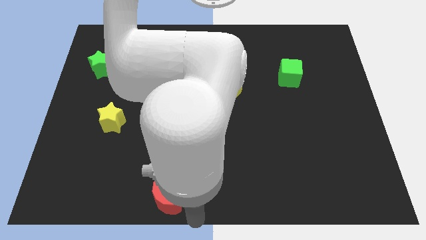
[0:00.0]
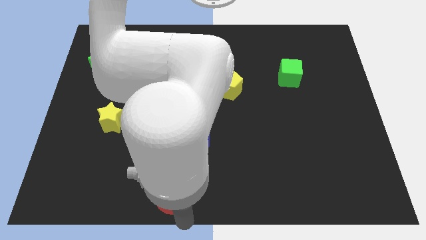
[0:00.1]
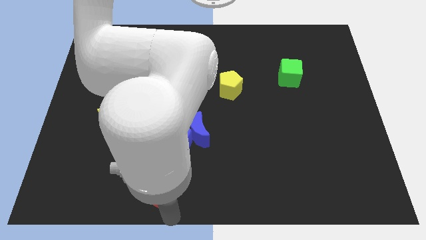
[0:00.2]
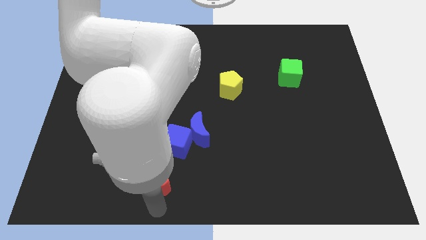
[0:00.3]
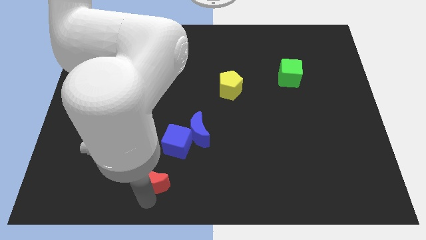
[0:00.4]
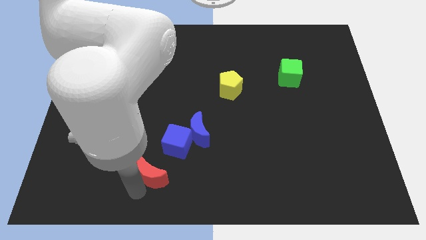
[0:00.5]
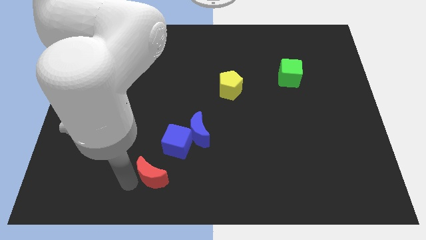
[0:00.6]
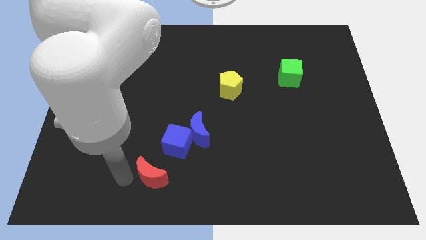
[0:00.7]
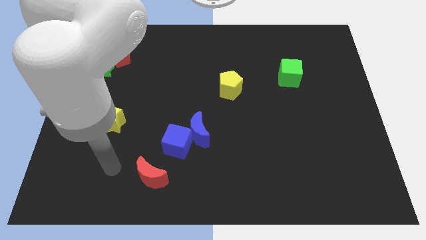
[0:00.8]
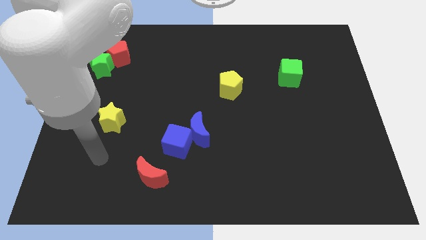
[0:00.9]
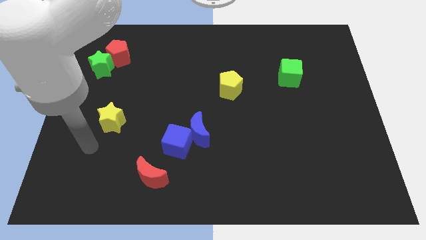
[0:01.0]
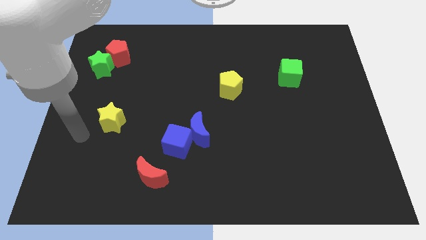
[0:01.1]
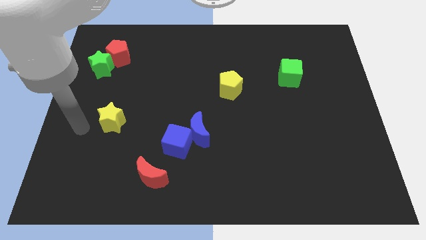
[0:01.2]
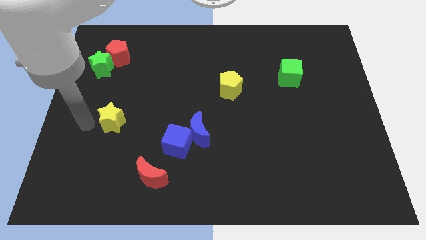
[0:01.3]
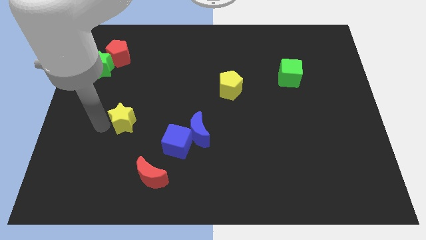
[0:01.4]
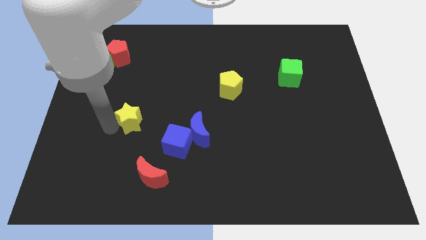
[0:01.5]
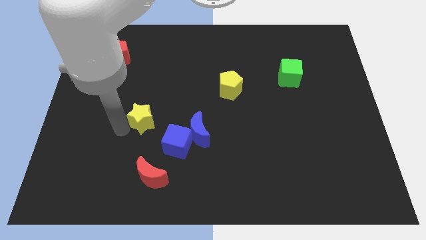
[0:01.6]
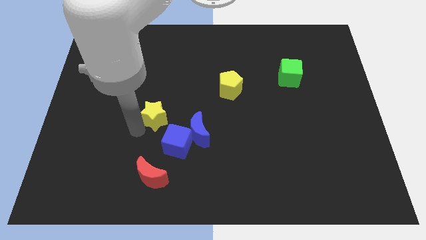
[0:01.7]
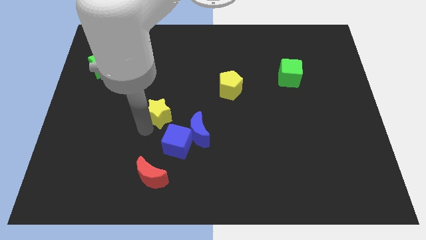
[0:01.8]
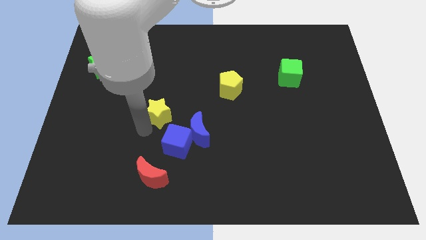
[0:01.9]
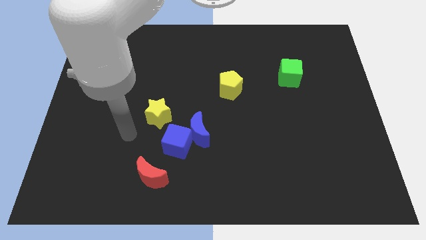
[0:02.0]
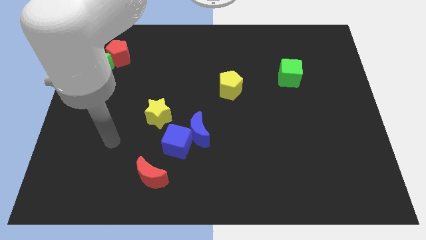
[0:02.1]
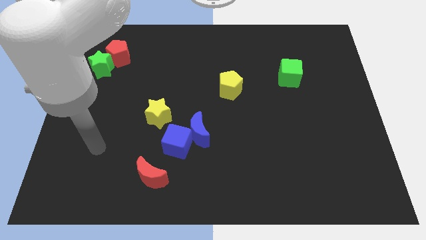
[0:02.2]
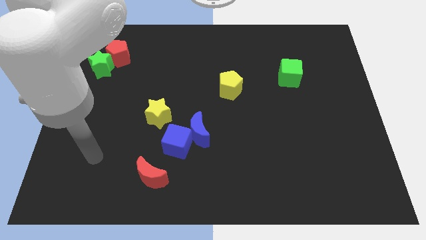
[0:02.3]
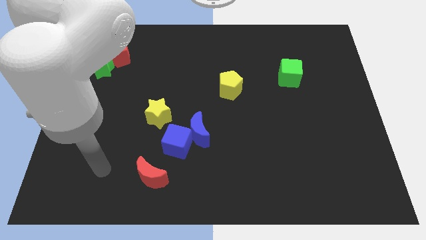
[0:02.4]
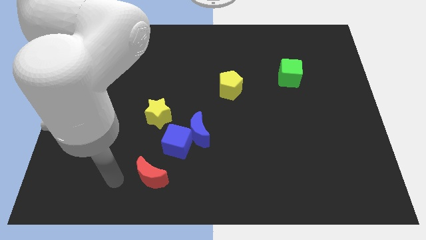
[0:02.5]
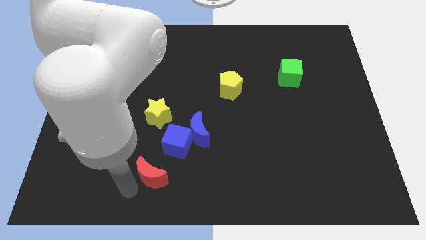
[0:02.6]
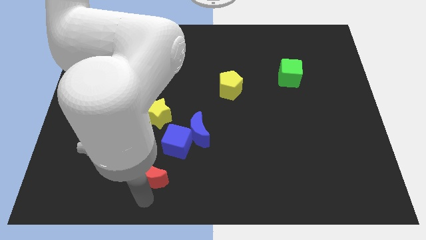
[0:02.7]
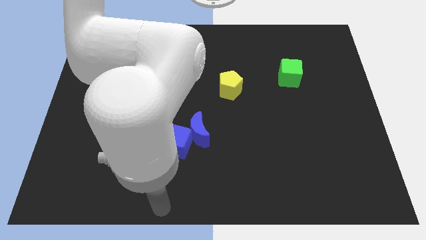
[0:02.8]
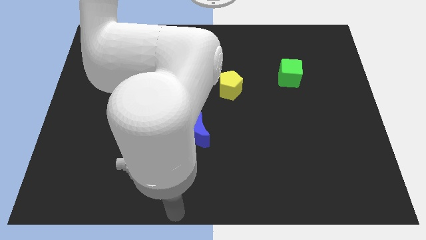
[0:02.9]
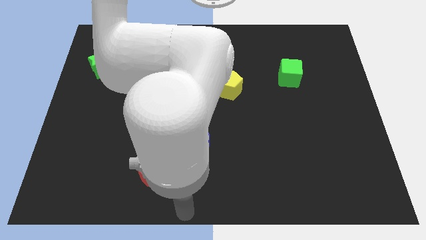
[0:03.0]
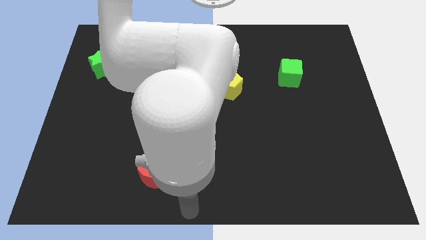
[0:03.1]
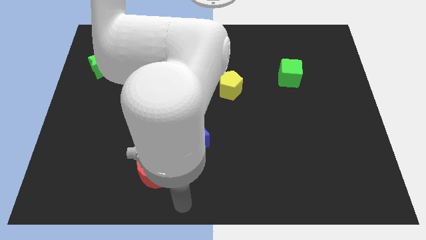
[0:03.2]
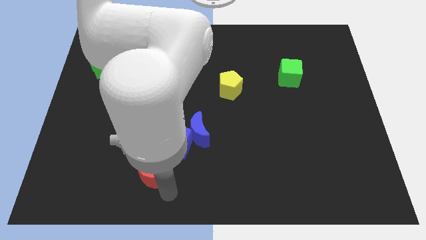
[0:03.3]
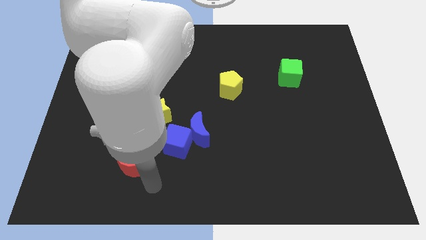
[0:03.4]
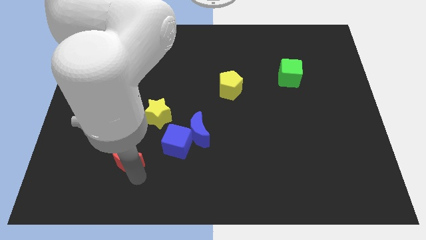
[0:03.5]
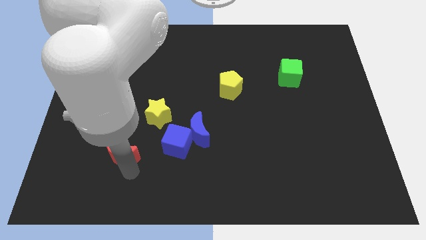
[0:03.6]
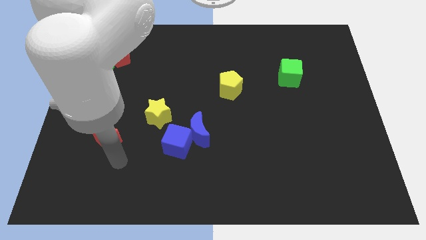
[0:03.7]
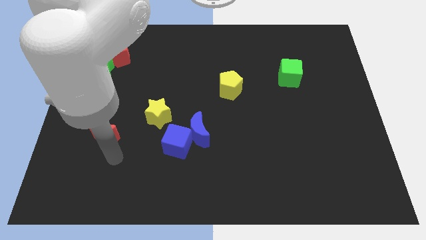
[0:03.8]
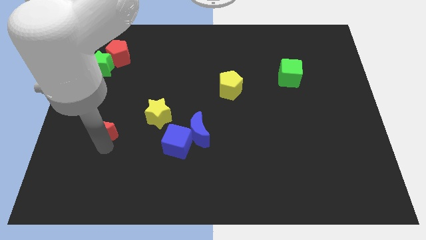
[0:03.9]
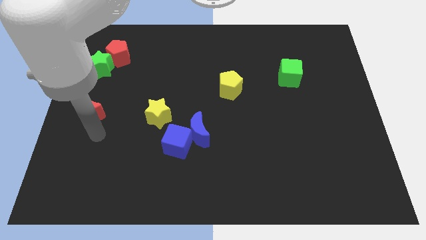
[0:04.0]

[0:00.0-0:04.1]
drag red moon parallel right to the yellow star

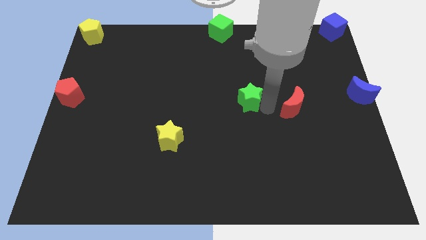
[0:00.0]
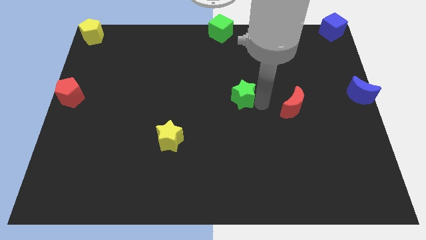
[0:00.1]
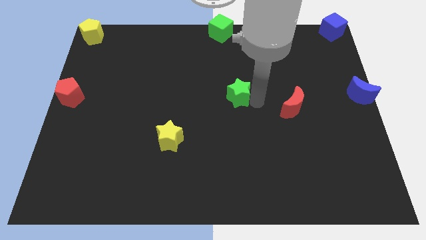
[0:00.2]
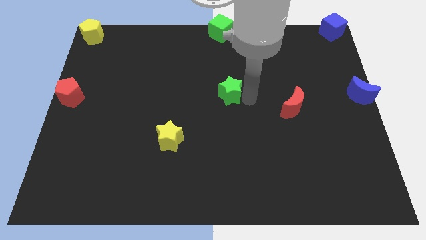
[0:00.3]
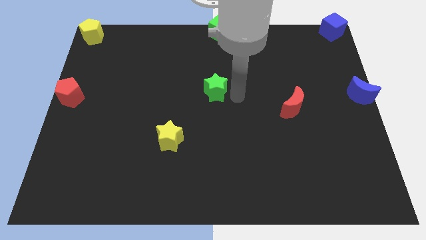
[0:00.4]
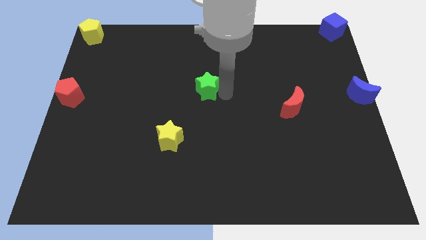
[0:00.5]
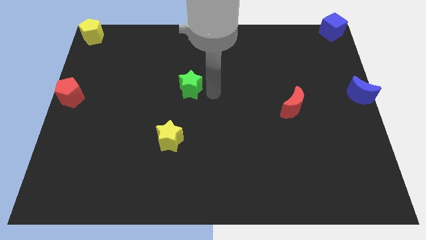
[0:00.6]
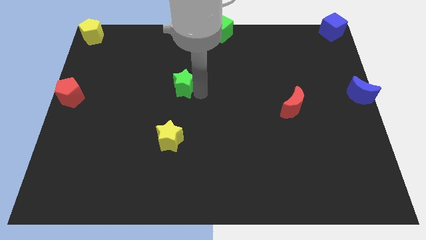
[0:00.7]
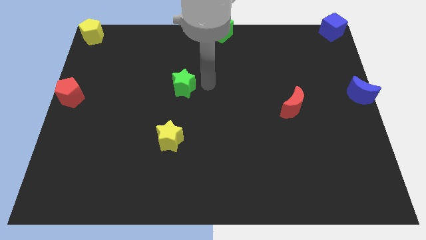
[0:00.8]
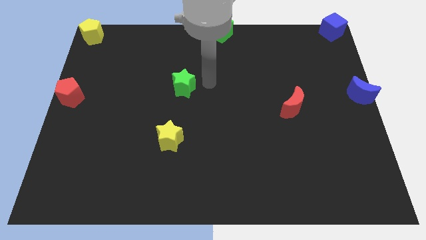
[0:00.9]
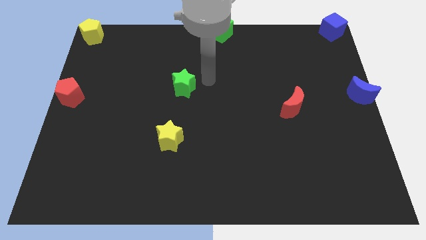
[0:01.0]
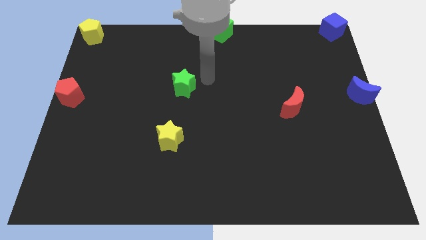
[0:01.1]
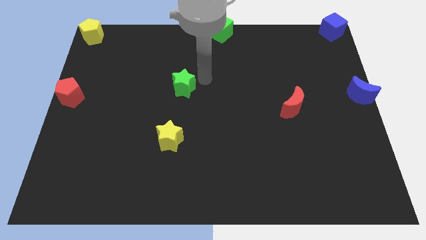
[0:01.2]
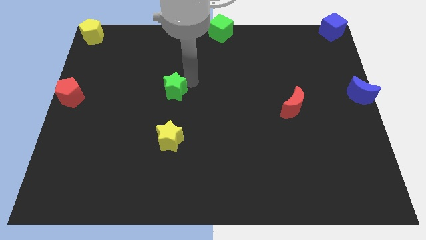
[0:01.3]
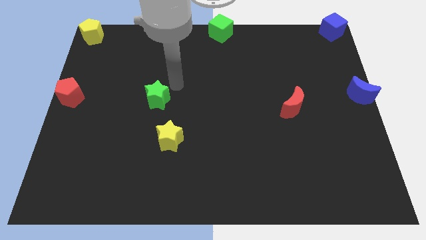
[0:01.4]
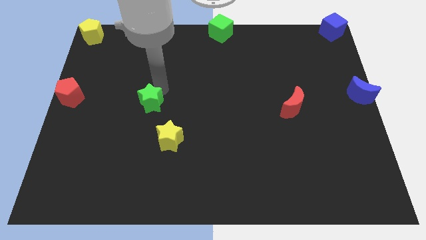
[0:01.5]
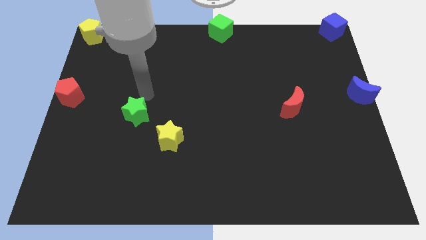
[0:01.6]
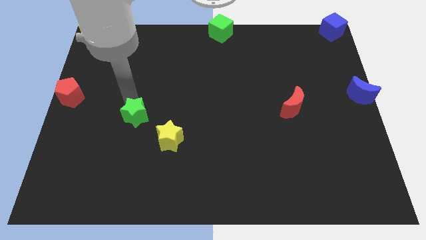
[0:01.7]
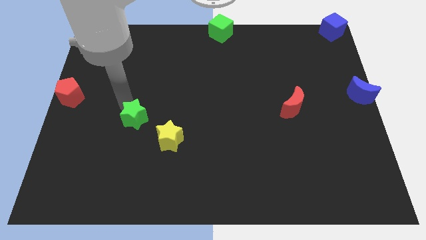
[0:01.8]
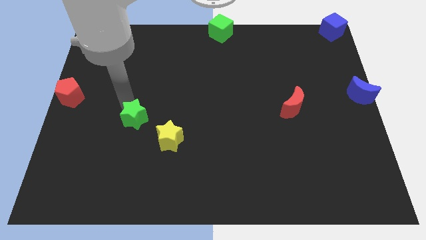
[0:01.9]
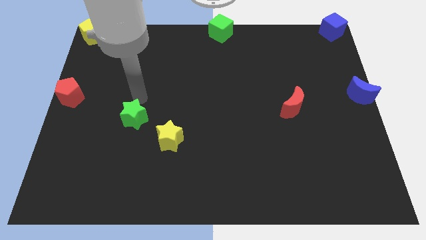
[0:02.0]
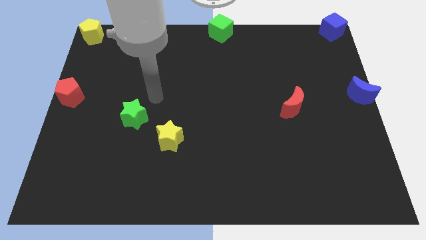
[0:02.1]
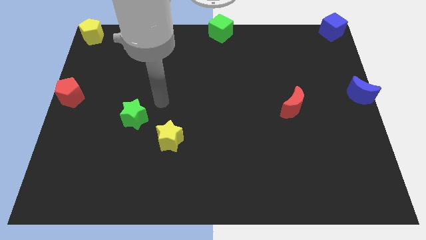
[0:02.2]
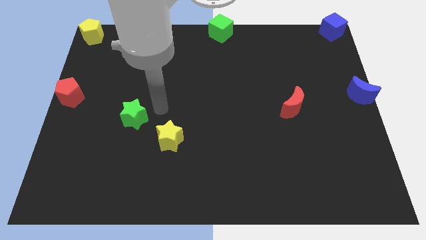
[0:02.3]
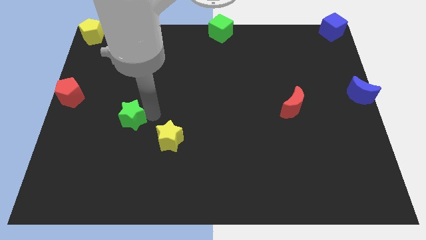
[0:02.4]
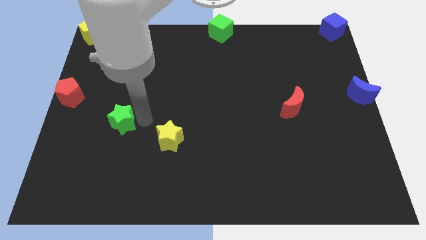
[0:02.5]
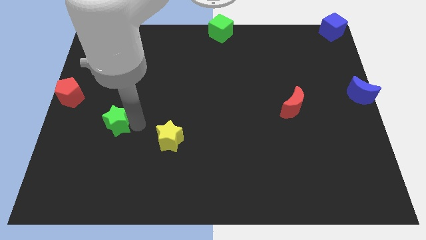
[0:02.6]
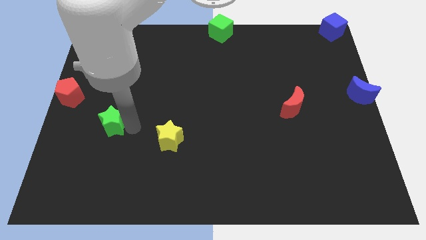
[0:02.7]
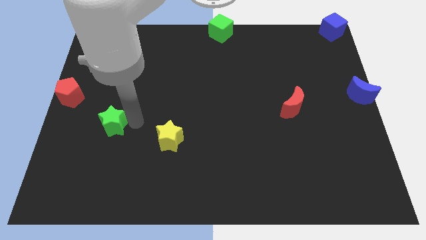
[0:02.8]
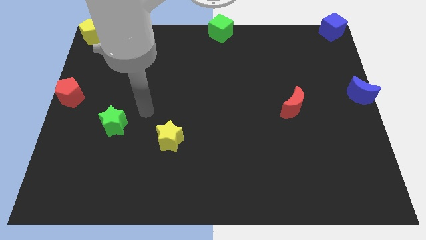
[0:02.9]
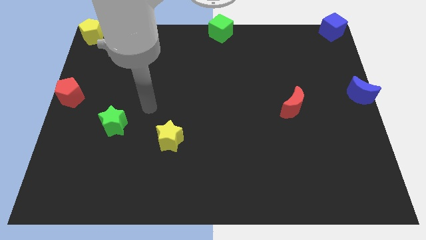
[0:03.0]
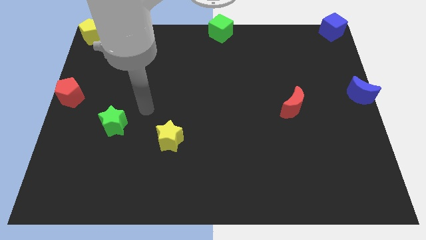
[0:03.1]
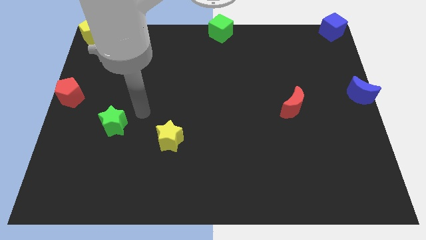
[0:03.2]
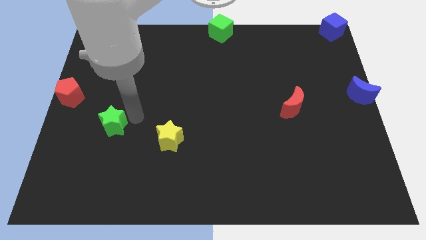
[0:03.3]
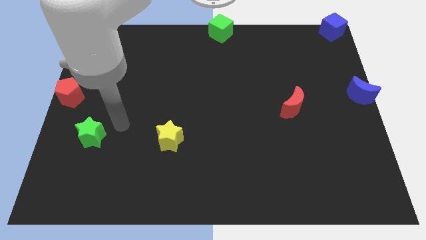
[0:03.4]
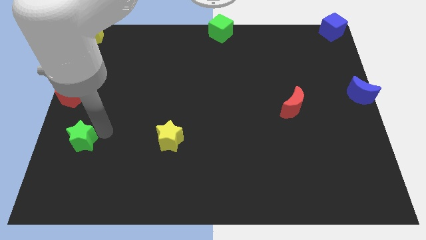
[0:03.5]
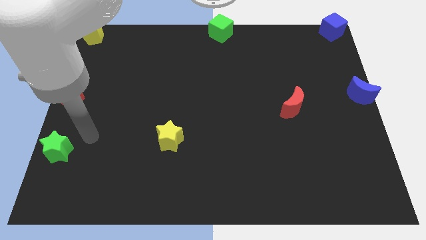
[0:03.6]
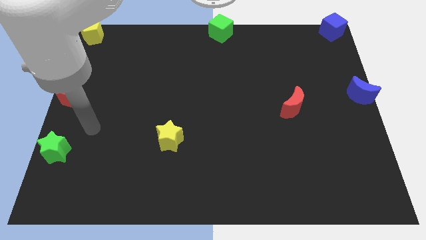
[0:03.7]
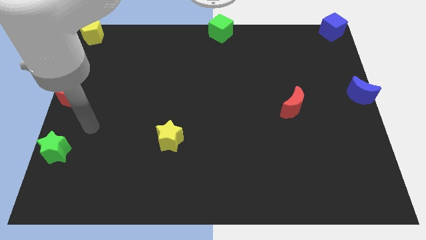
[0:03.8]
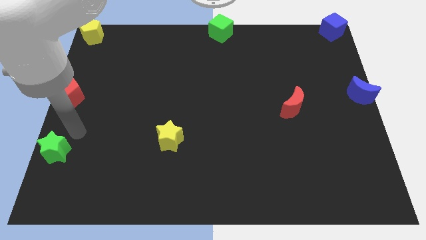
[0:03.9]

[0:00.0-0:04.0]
put the green star underneath the red pentagon

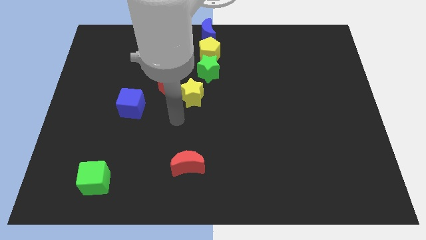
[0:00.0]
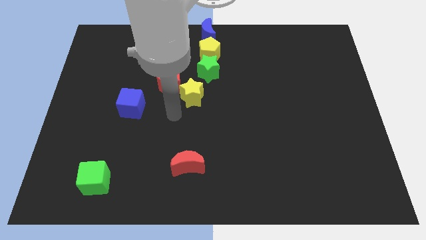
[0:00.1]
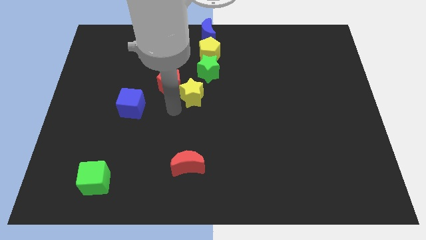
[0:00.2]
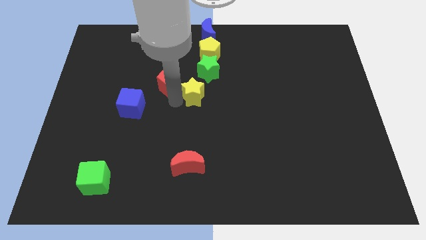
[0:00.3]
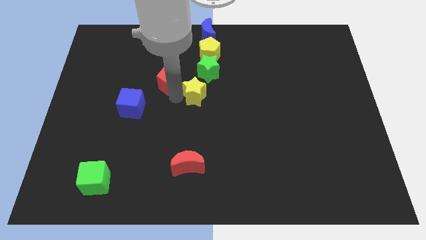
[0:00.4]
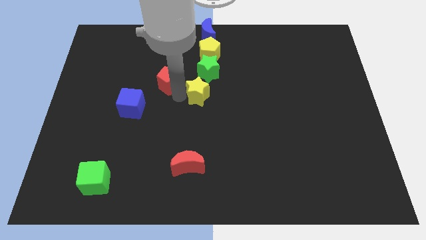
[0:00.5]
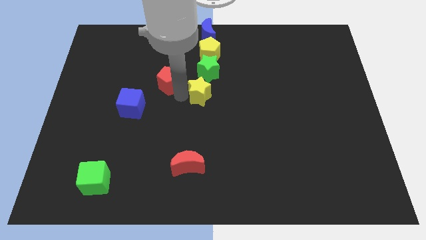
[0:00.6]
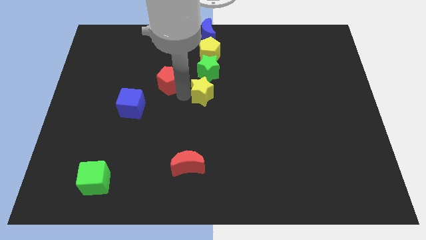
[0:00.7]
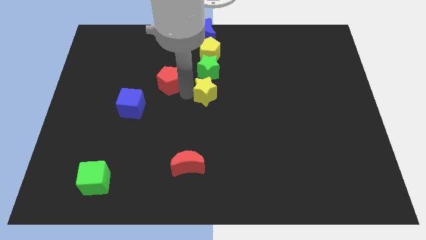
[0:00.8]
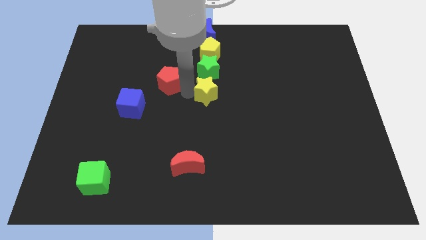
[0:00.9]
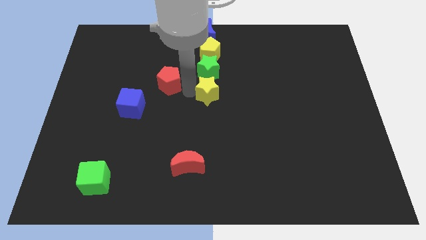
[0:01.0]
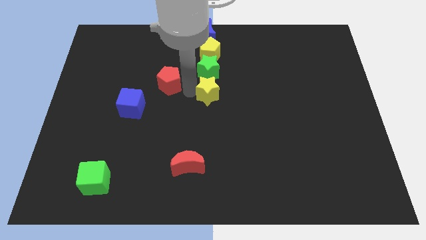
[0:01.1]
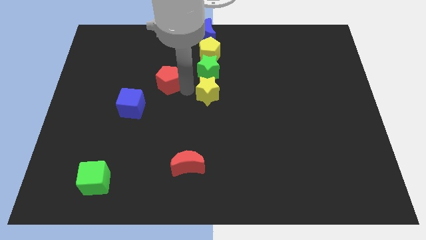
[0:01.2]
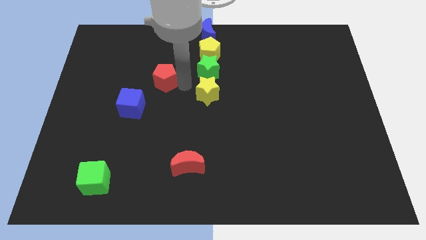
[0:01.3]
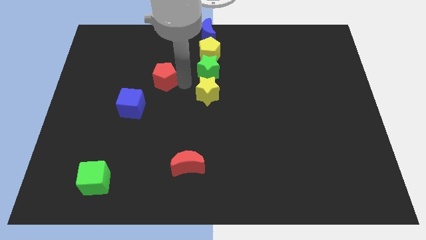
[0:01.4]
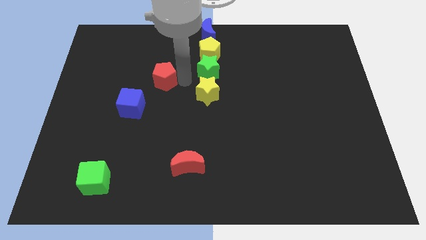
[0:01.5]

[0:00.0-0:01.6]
move the yellow star to the bottom side of the green star
